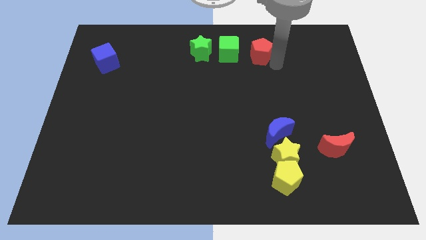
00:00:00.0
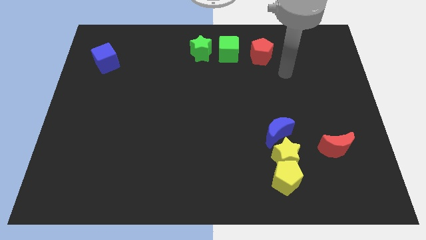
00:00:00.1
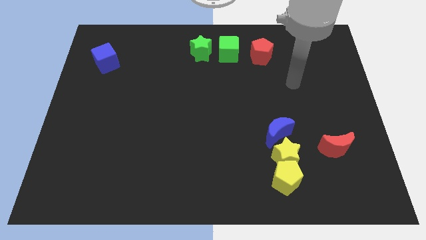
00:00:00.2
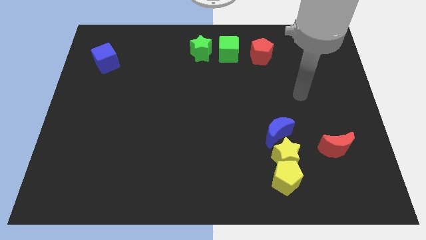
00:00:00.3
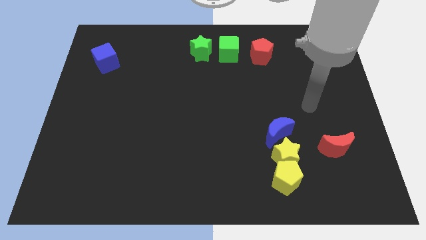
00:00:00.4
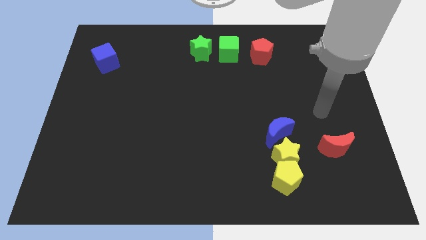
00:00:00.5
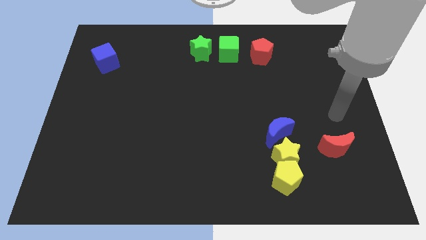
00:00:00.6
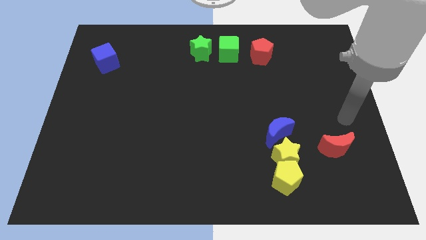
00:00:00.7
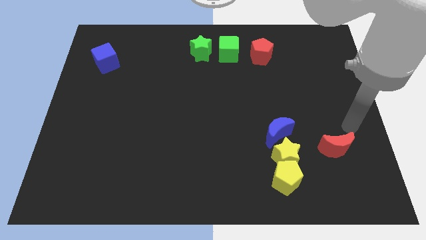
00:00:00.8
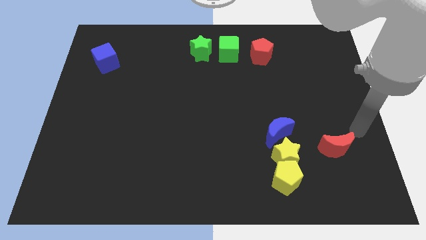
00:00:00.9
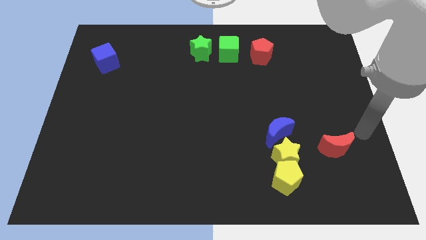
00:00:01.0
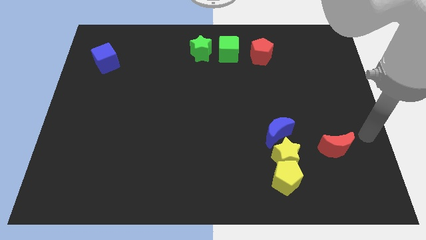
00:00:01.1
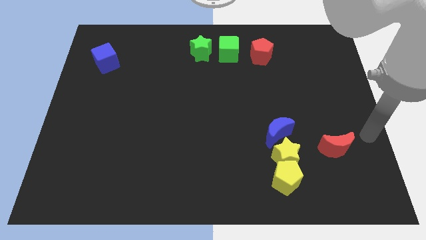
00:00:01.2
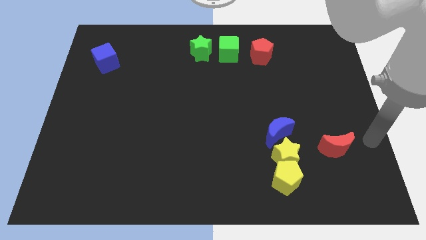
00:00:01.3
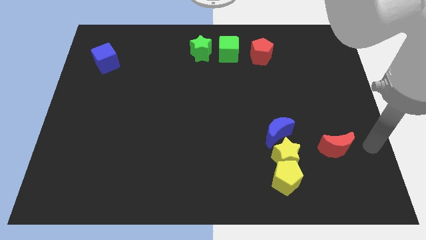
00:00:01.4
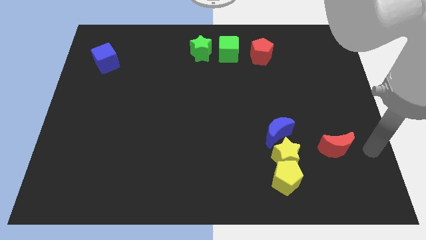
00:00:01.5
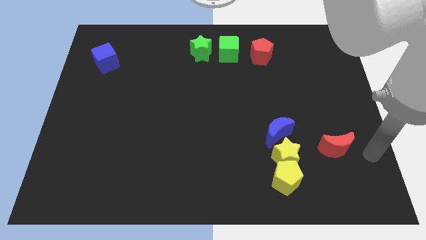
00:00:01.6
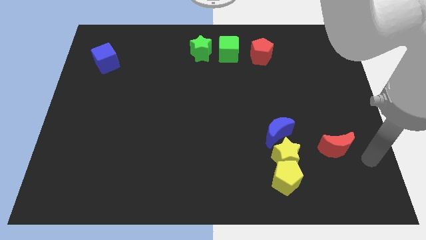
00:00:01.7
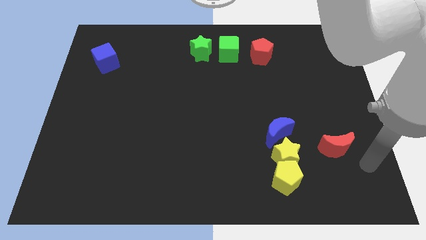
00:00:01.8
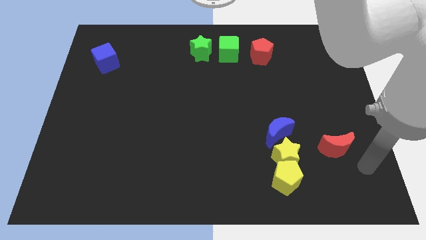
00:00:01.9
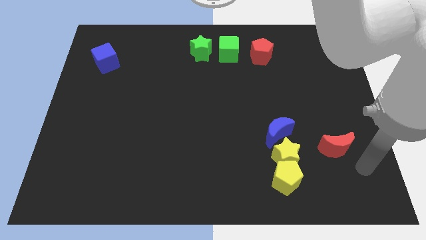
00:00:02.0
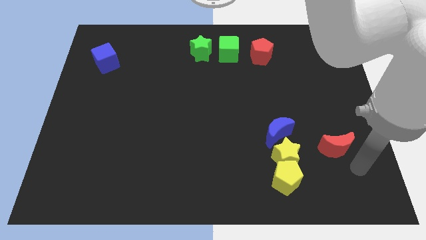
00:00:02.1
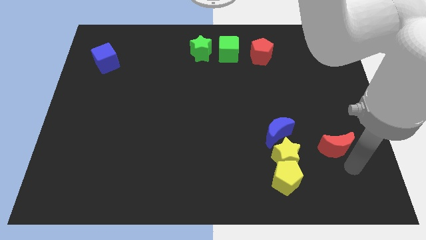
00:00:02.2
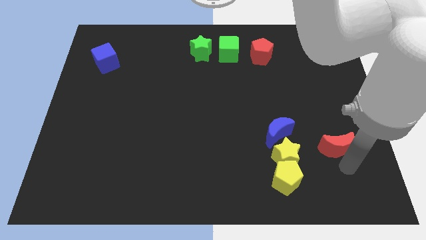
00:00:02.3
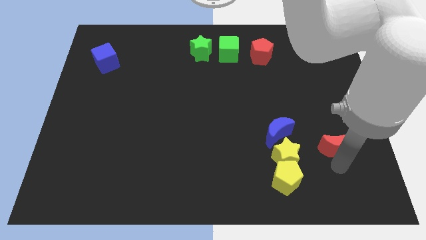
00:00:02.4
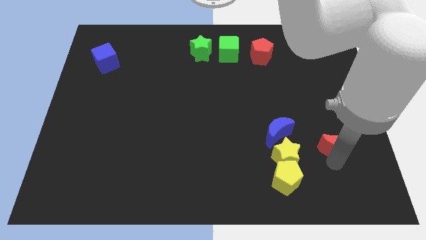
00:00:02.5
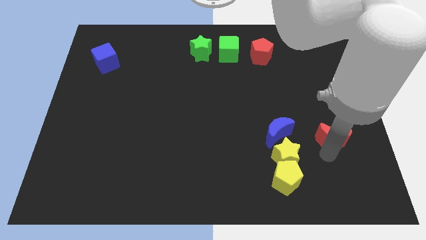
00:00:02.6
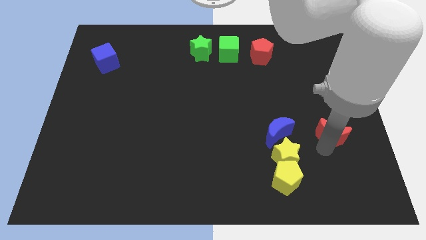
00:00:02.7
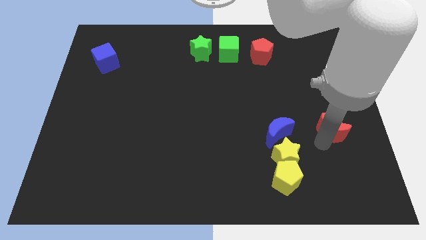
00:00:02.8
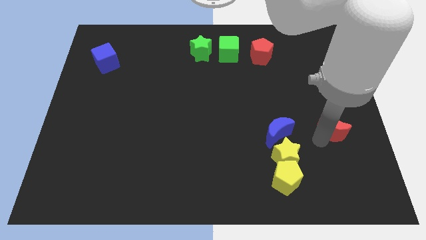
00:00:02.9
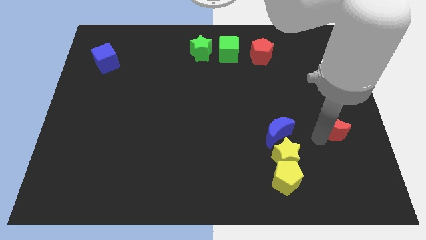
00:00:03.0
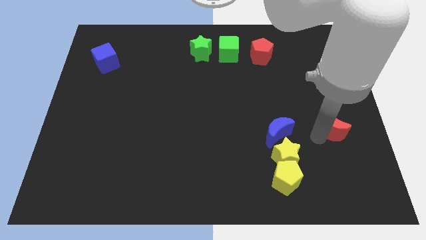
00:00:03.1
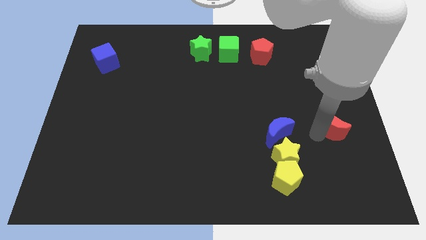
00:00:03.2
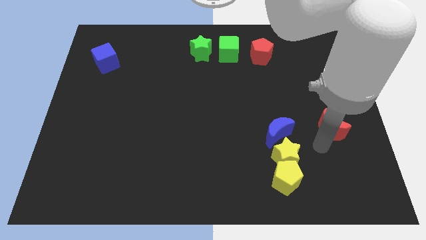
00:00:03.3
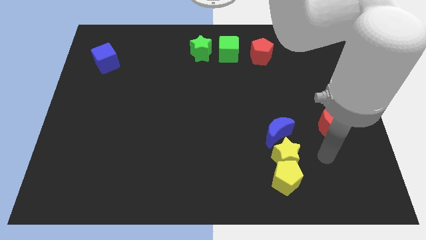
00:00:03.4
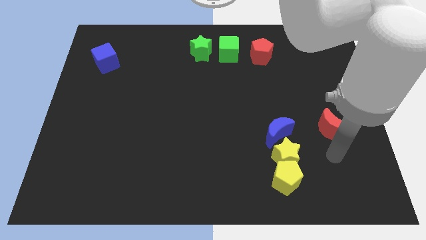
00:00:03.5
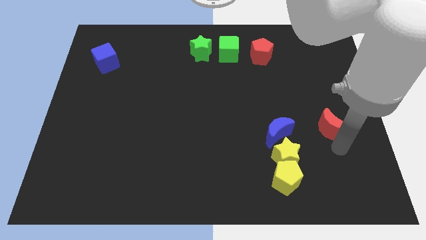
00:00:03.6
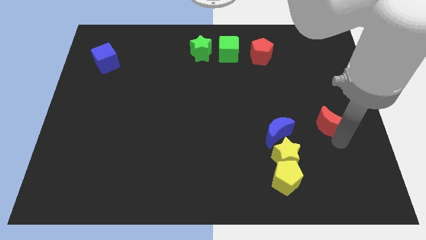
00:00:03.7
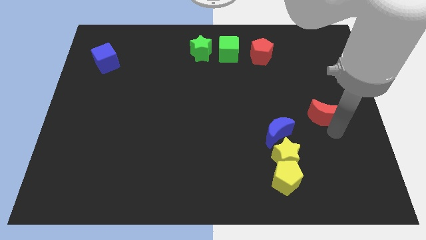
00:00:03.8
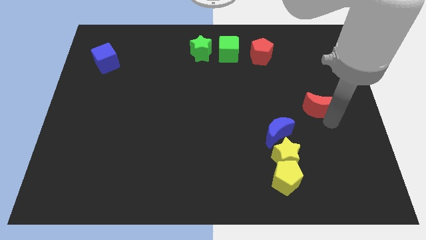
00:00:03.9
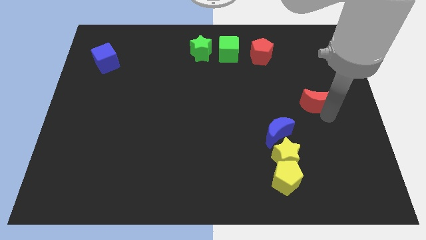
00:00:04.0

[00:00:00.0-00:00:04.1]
place the red moon diagonally to blue moon

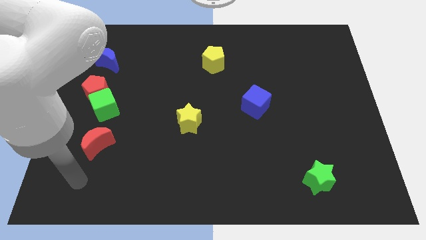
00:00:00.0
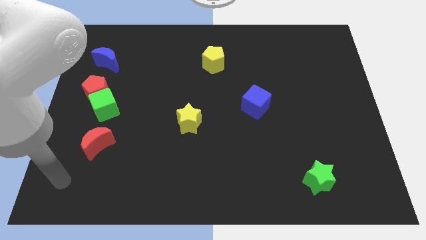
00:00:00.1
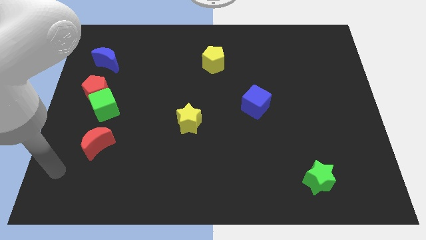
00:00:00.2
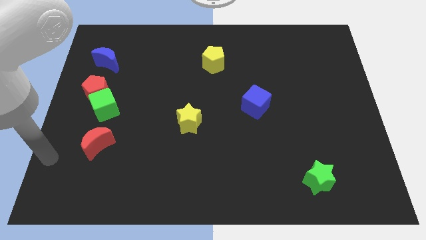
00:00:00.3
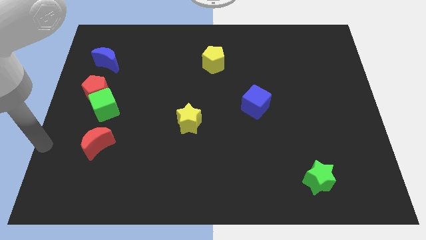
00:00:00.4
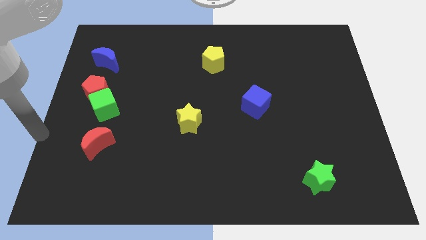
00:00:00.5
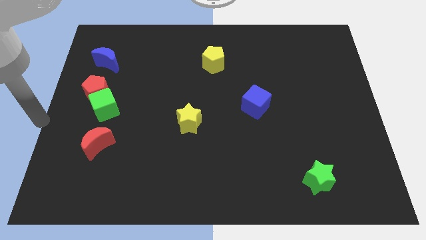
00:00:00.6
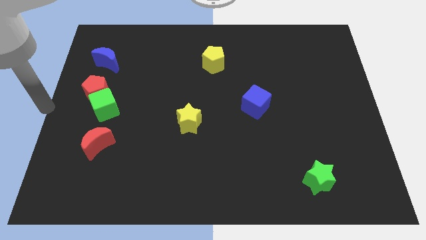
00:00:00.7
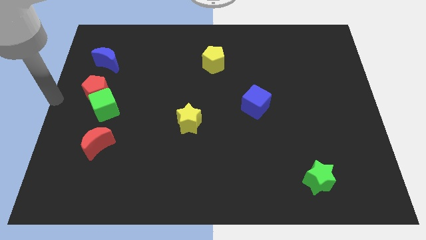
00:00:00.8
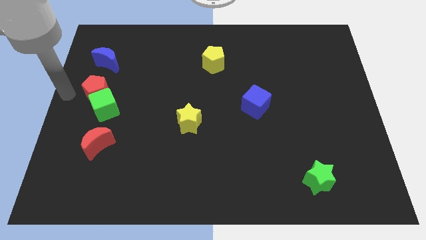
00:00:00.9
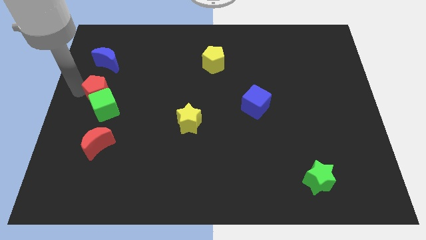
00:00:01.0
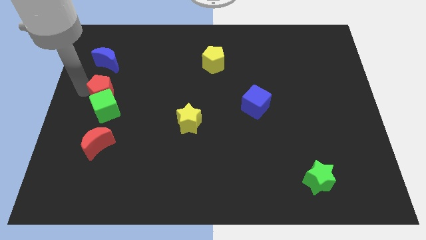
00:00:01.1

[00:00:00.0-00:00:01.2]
place the arm to red pentagon

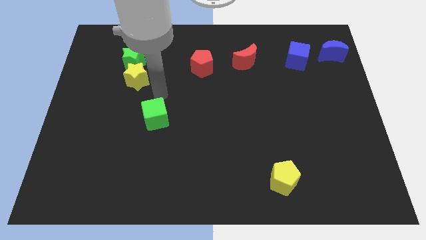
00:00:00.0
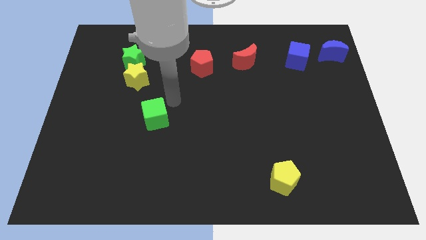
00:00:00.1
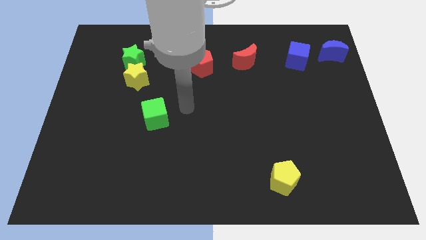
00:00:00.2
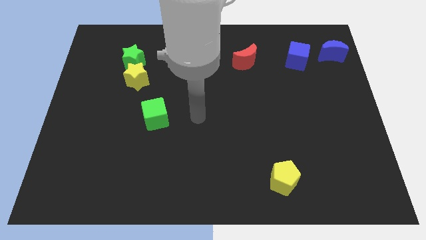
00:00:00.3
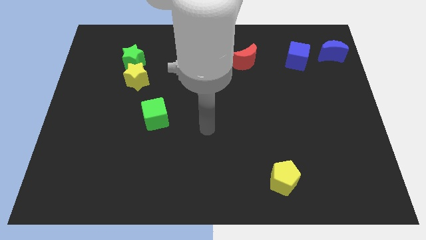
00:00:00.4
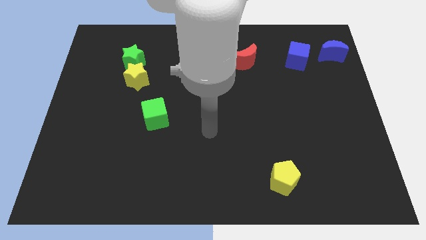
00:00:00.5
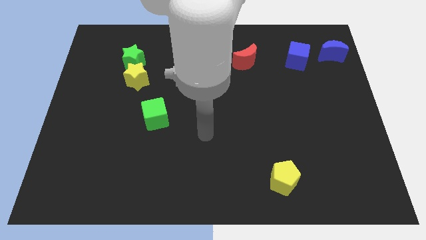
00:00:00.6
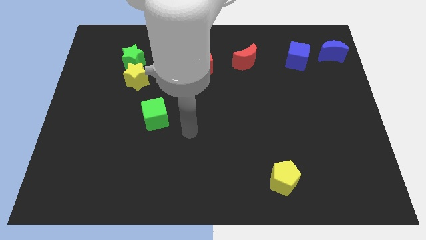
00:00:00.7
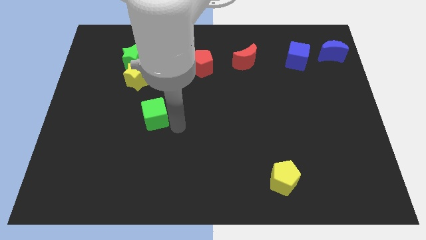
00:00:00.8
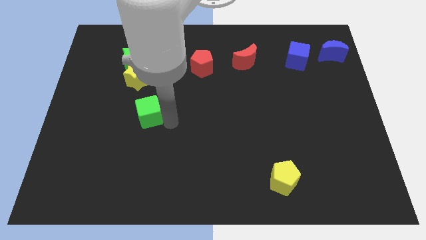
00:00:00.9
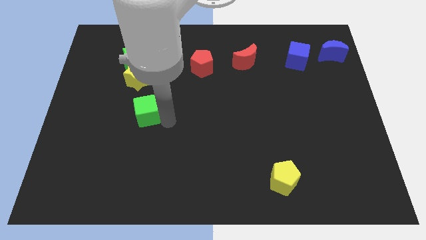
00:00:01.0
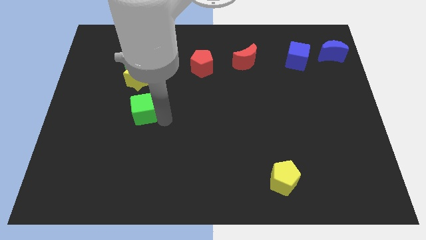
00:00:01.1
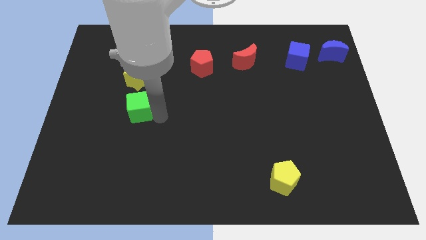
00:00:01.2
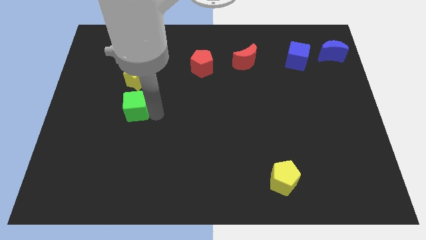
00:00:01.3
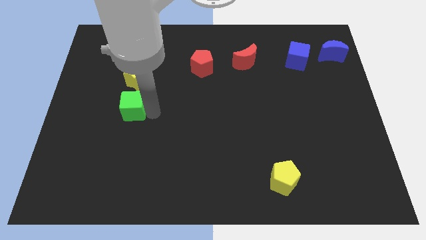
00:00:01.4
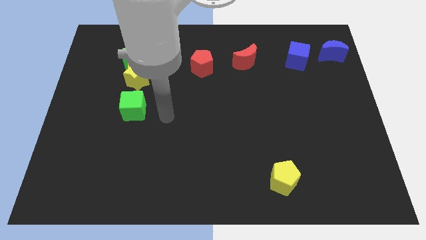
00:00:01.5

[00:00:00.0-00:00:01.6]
push the green cube vertically below the bottom side of the yellow star

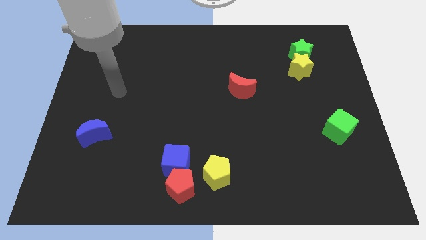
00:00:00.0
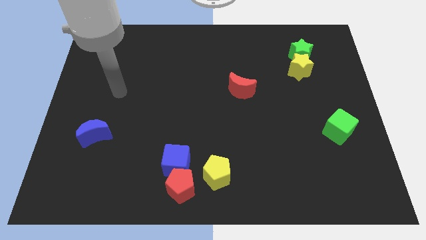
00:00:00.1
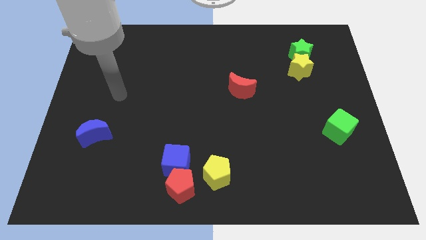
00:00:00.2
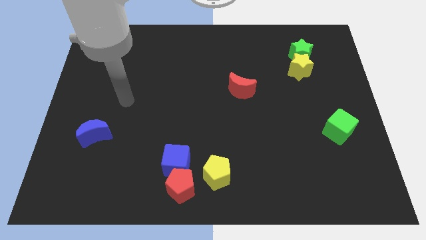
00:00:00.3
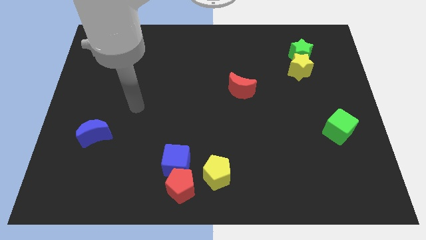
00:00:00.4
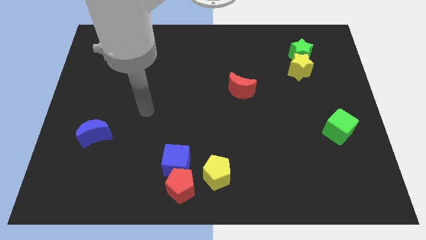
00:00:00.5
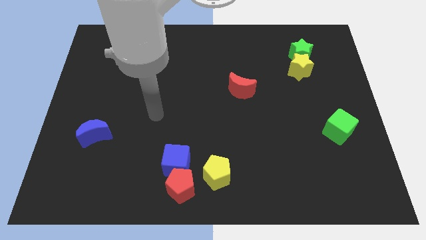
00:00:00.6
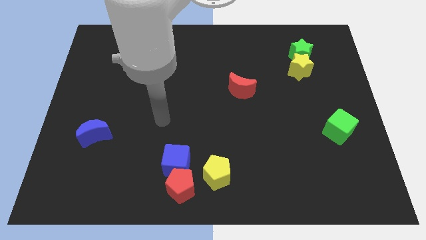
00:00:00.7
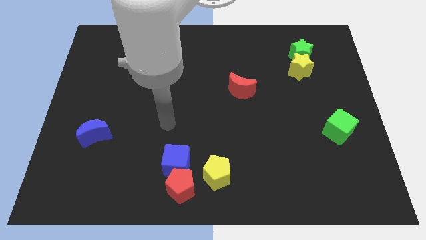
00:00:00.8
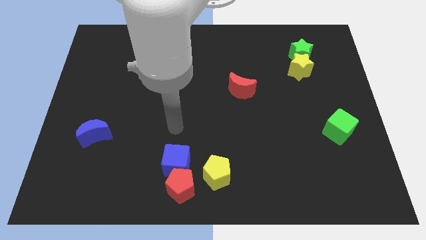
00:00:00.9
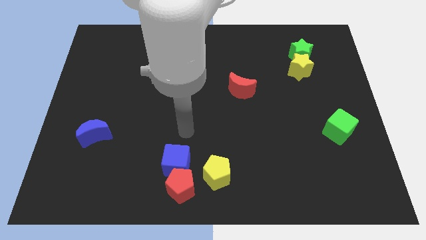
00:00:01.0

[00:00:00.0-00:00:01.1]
move your arm to the top of the blue cube

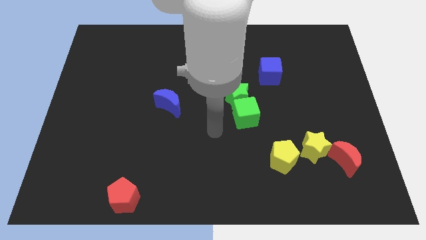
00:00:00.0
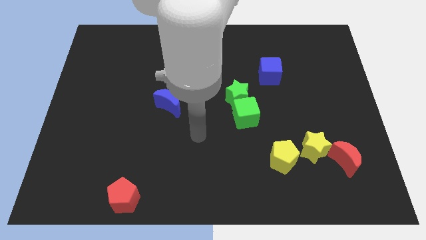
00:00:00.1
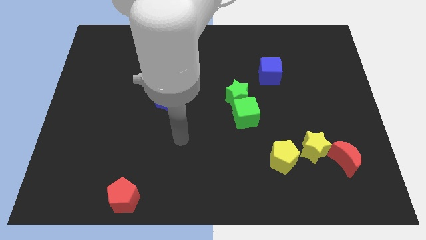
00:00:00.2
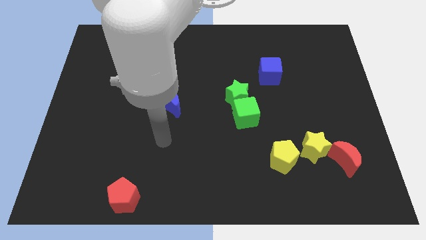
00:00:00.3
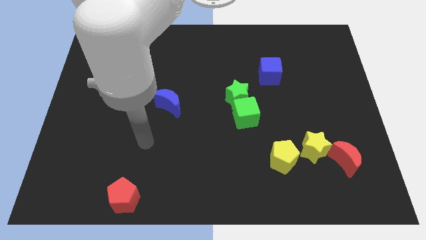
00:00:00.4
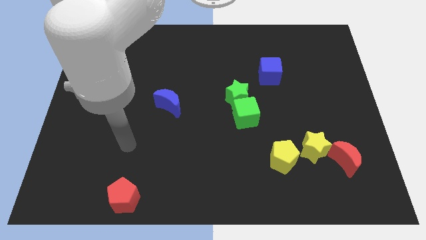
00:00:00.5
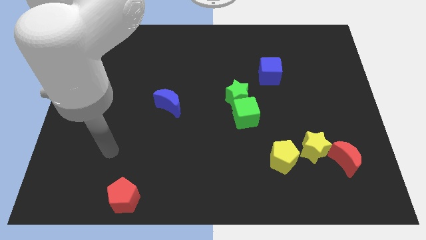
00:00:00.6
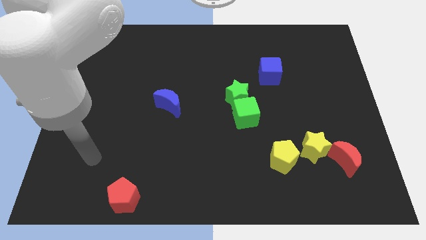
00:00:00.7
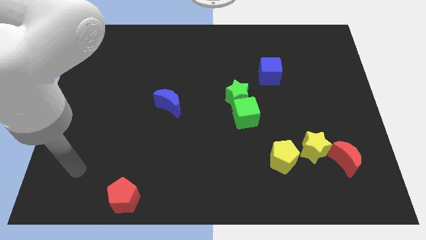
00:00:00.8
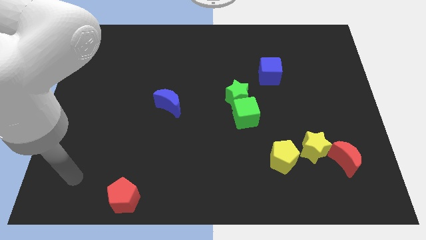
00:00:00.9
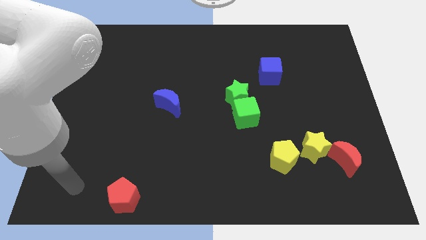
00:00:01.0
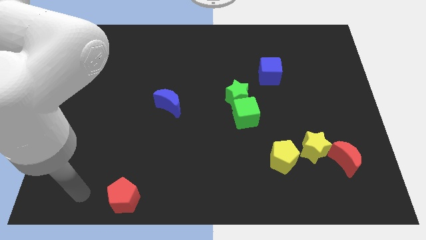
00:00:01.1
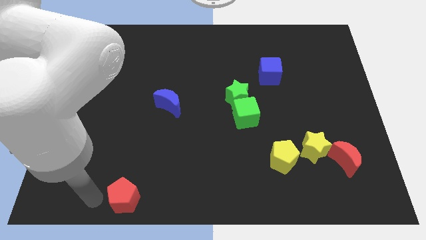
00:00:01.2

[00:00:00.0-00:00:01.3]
move your arm to the left of the red pentagon
